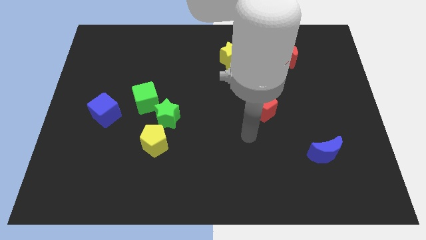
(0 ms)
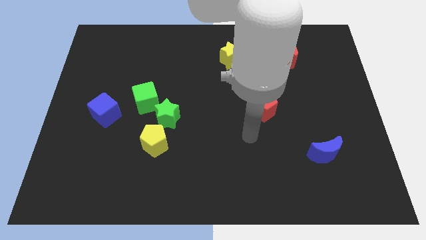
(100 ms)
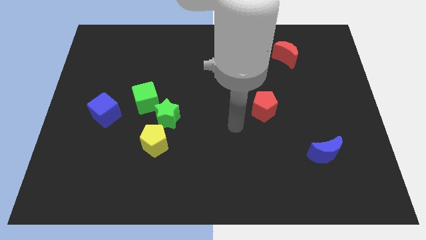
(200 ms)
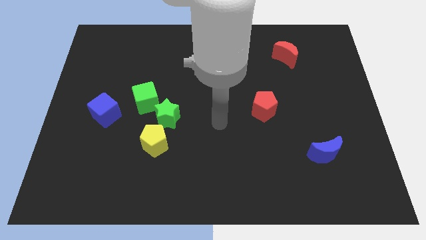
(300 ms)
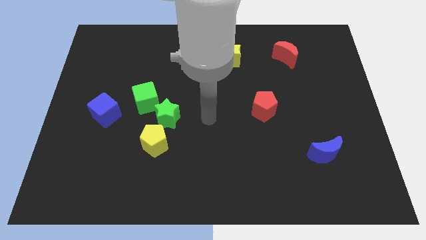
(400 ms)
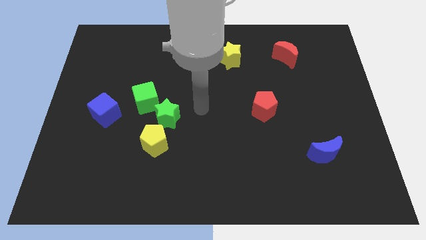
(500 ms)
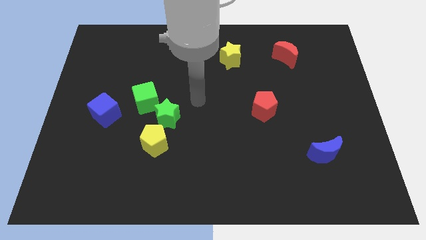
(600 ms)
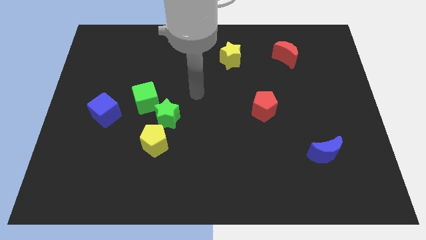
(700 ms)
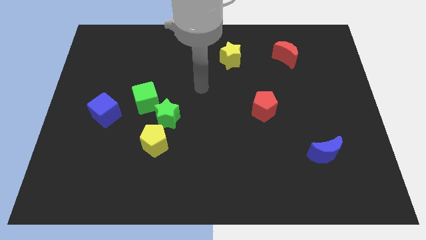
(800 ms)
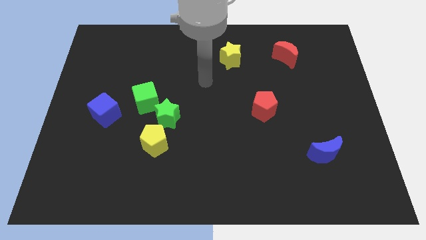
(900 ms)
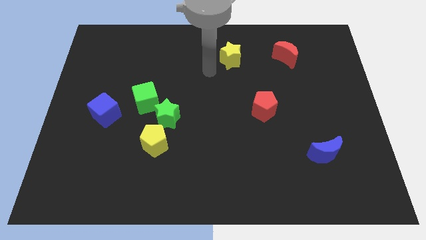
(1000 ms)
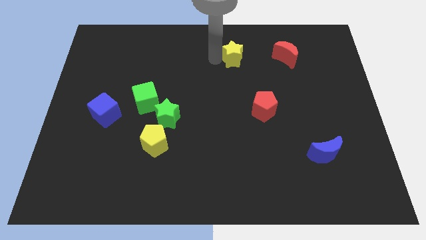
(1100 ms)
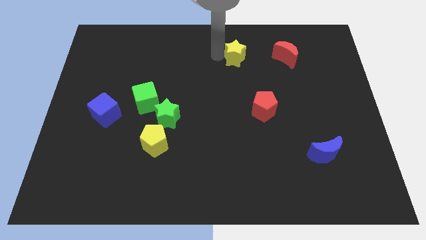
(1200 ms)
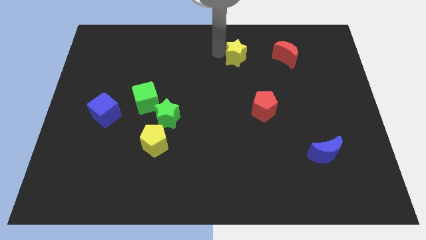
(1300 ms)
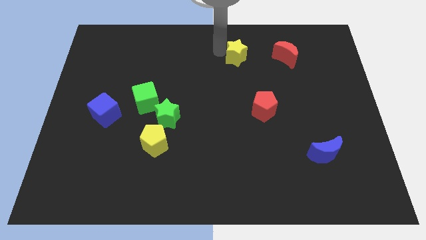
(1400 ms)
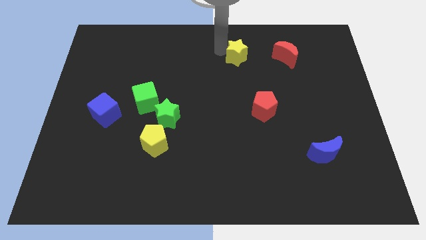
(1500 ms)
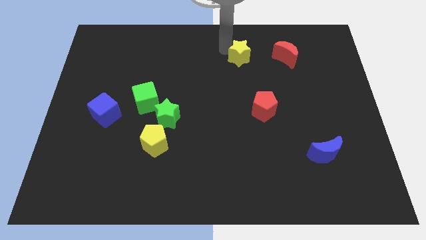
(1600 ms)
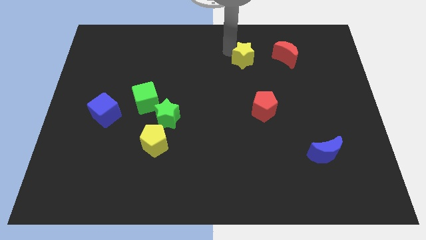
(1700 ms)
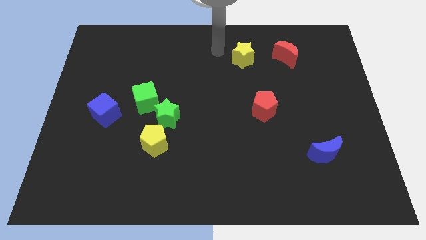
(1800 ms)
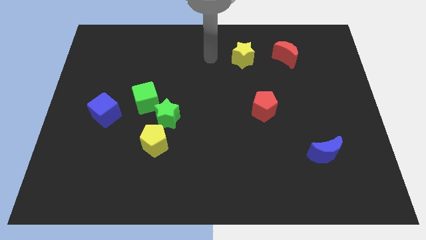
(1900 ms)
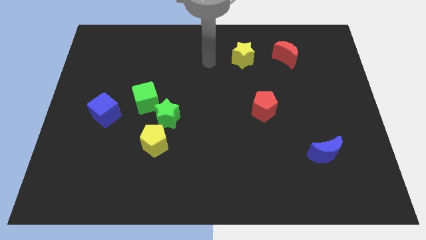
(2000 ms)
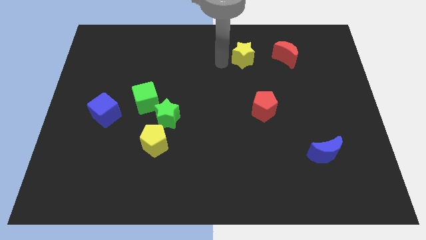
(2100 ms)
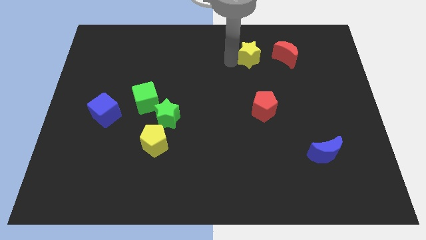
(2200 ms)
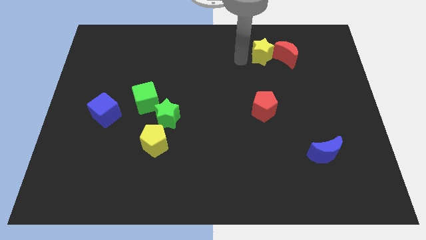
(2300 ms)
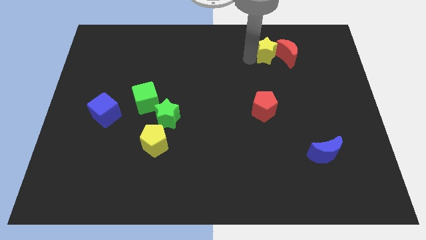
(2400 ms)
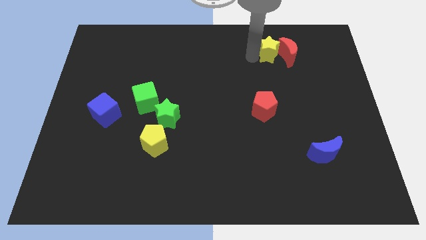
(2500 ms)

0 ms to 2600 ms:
slide the yellow star next to the red moon

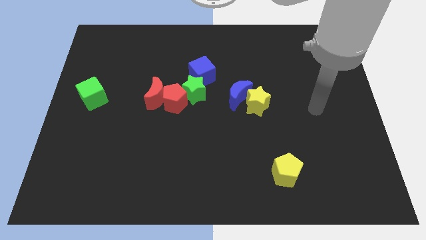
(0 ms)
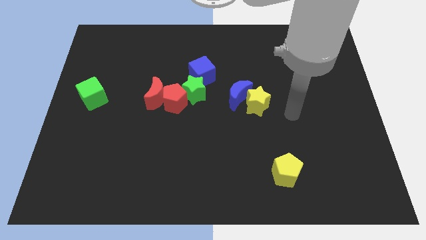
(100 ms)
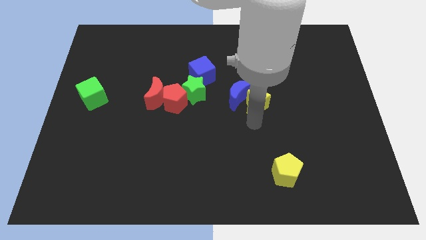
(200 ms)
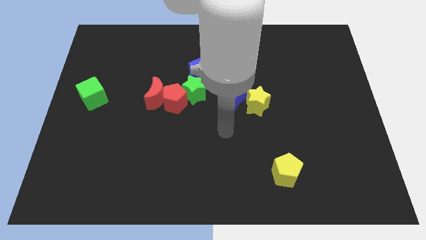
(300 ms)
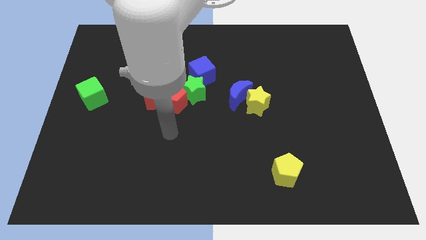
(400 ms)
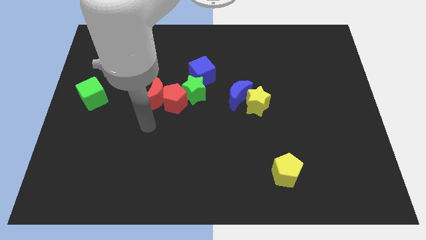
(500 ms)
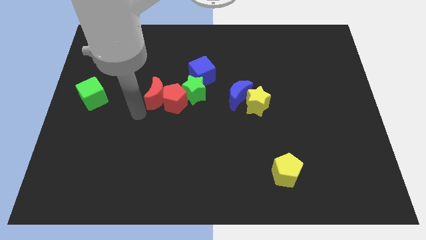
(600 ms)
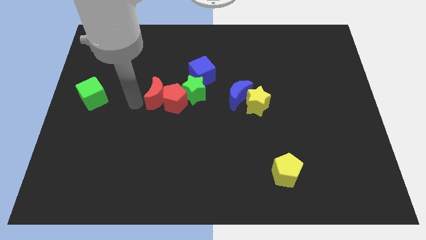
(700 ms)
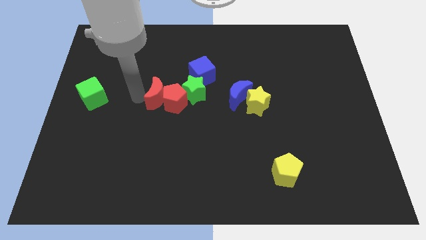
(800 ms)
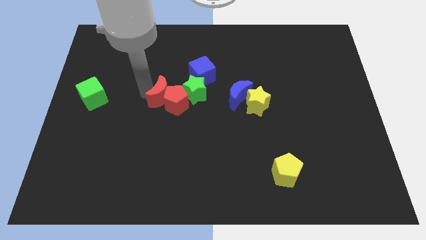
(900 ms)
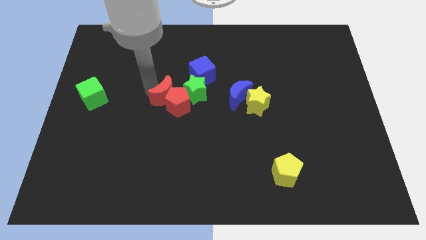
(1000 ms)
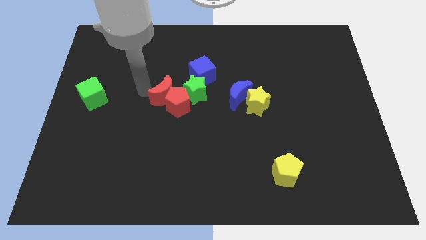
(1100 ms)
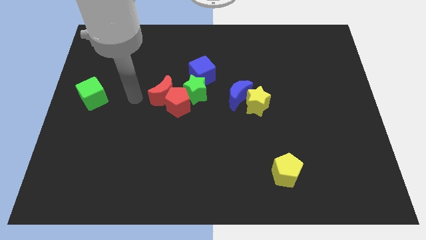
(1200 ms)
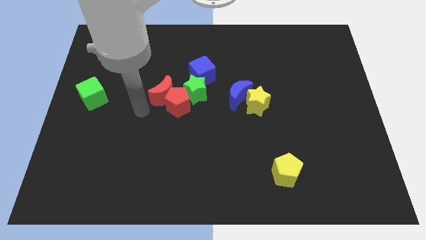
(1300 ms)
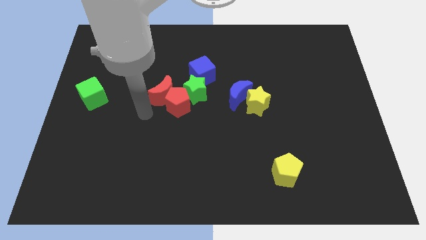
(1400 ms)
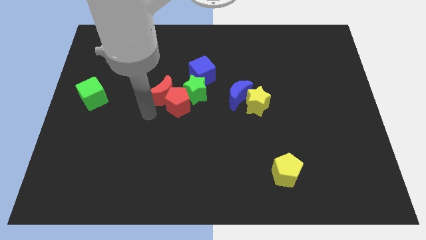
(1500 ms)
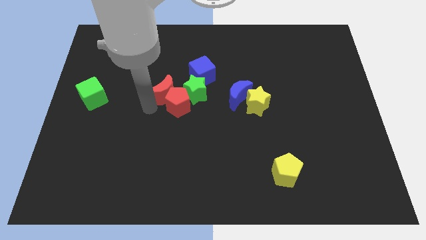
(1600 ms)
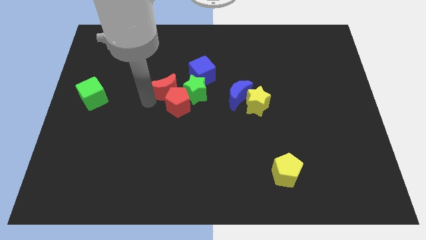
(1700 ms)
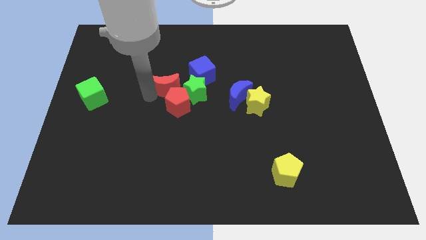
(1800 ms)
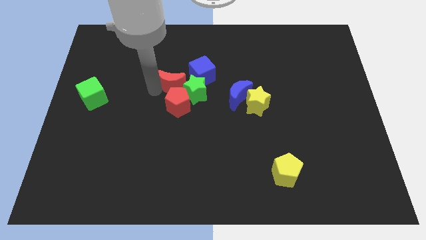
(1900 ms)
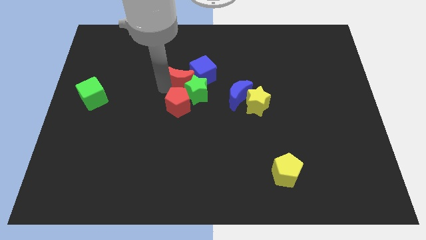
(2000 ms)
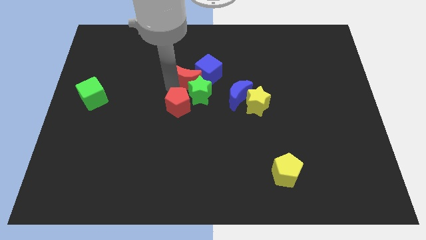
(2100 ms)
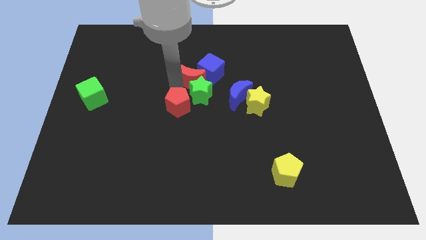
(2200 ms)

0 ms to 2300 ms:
put the red moon close to the blue cube

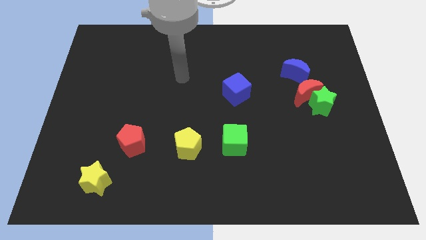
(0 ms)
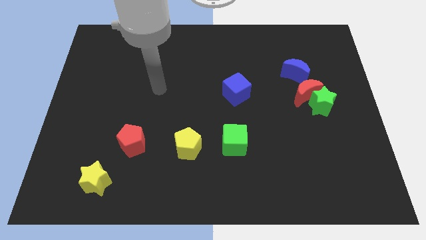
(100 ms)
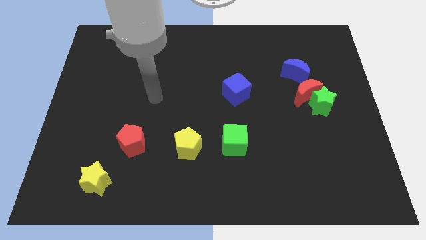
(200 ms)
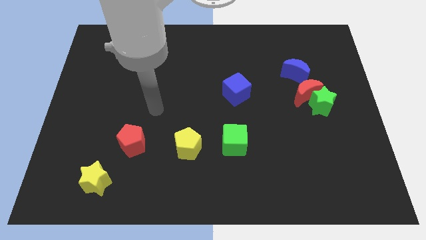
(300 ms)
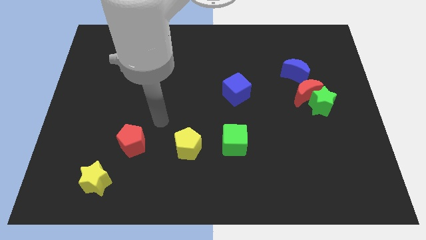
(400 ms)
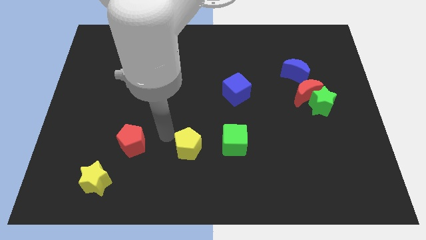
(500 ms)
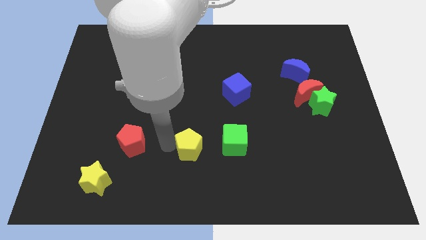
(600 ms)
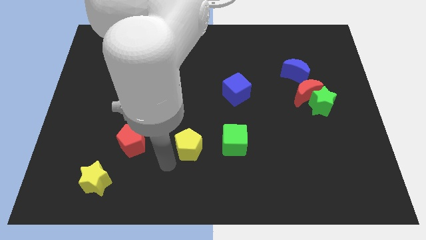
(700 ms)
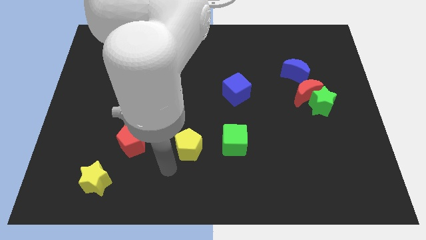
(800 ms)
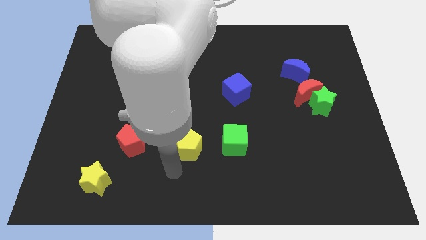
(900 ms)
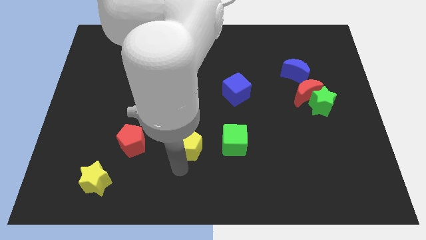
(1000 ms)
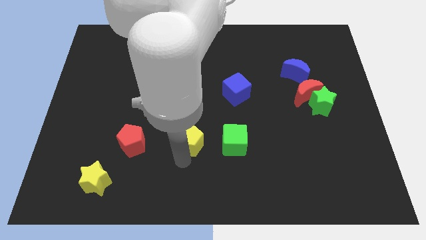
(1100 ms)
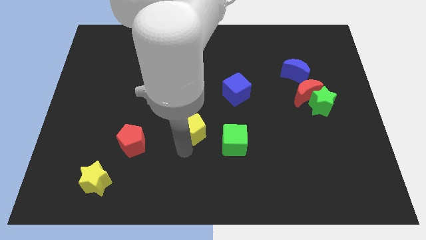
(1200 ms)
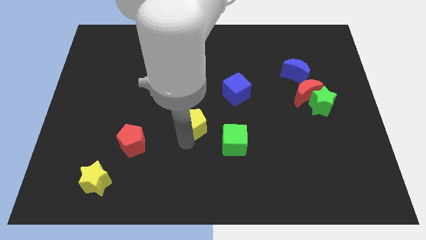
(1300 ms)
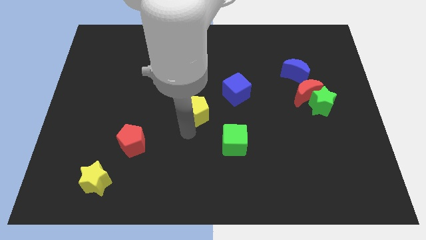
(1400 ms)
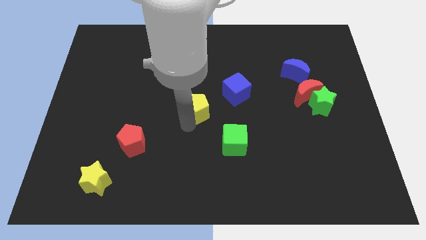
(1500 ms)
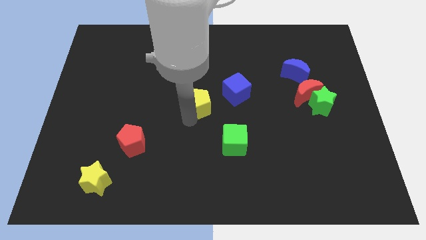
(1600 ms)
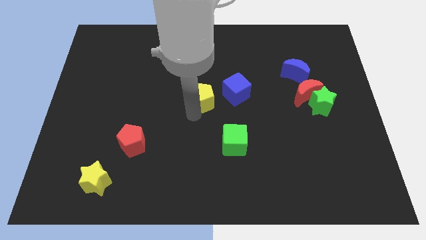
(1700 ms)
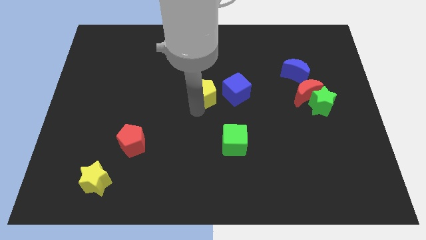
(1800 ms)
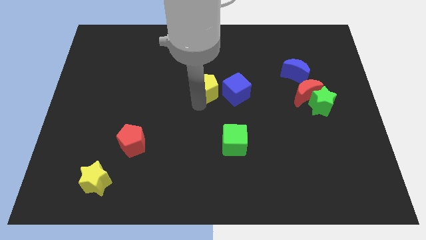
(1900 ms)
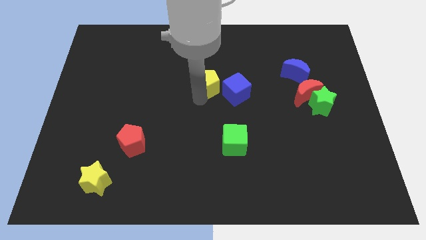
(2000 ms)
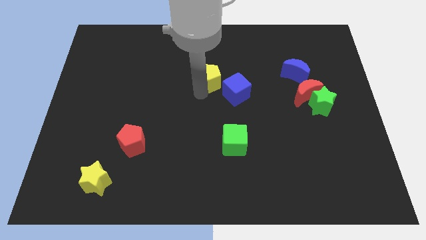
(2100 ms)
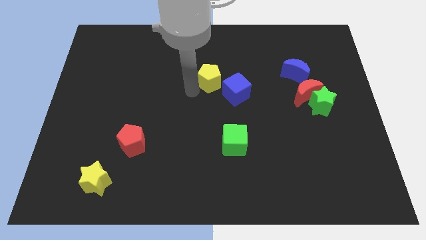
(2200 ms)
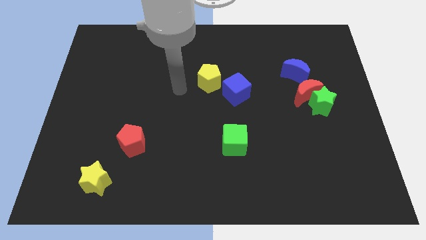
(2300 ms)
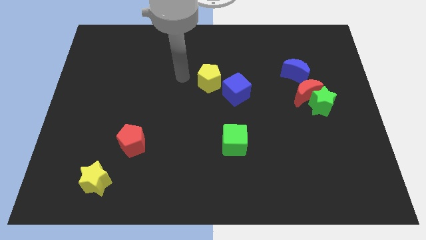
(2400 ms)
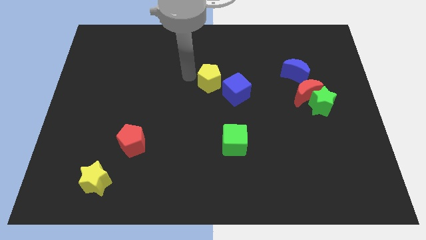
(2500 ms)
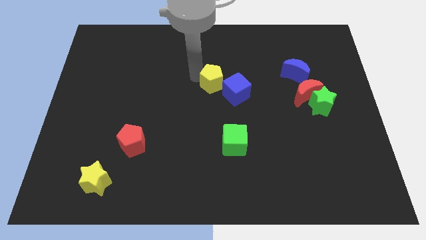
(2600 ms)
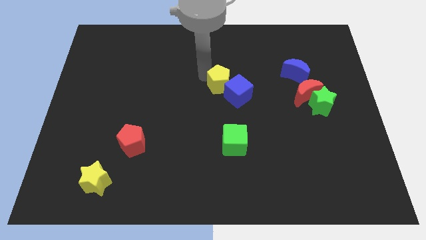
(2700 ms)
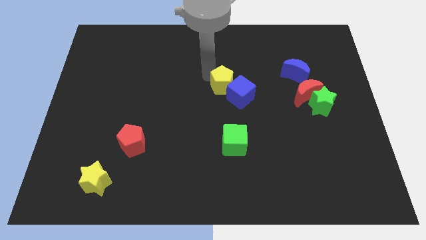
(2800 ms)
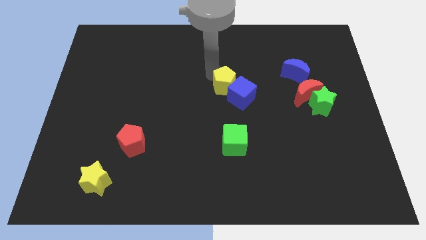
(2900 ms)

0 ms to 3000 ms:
push the yellow pentagon next to the blue cube

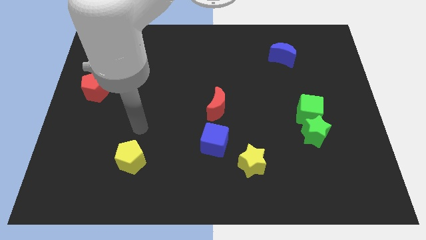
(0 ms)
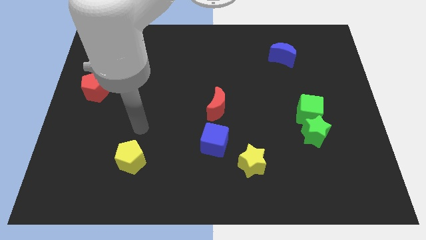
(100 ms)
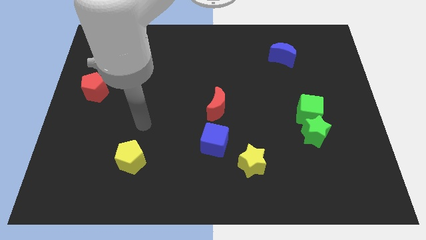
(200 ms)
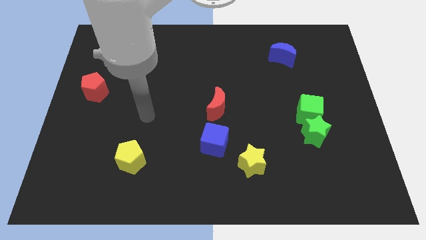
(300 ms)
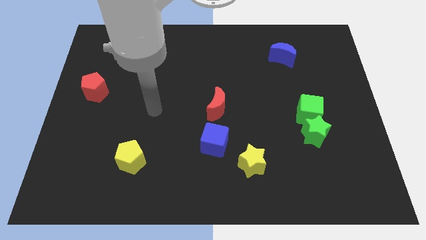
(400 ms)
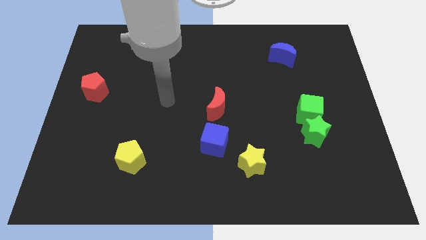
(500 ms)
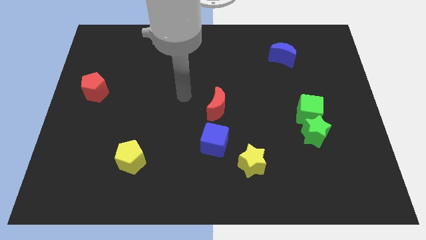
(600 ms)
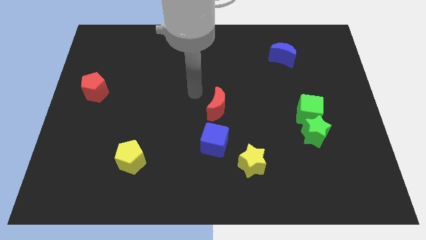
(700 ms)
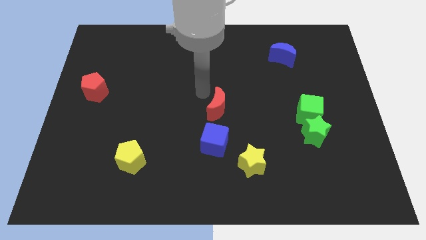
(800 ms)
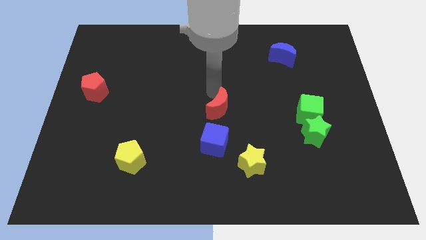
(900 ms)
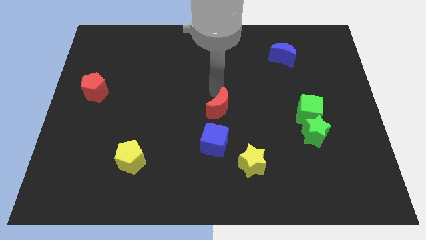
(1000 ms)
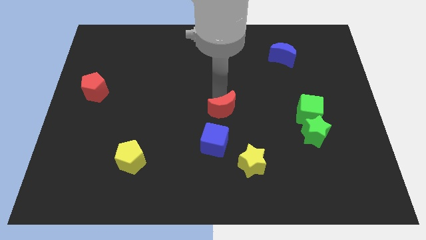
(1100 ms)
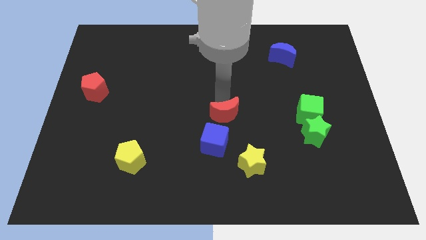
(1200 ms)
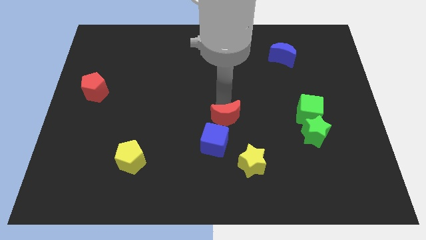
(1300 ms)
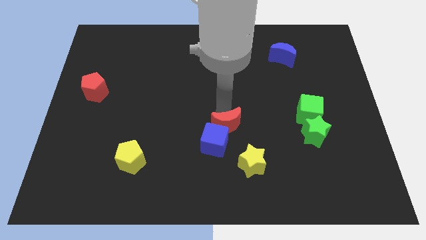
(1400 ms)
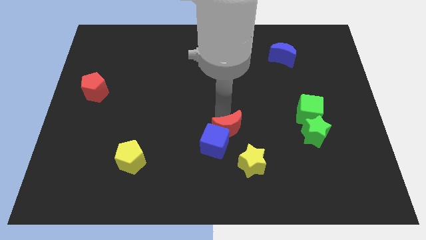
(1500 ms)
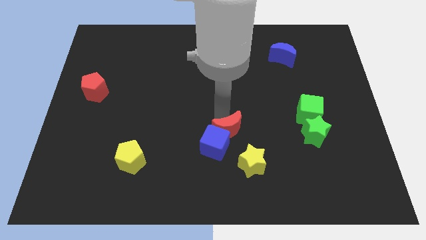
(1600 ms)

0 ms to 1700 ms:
move the red moon close to the blue cube
